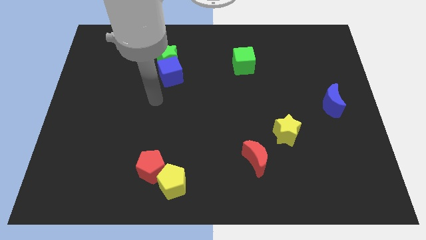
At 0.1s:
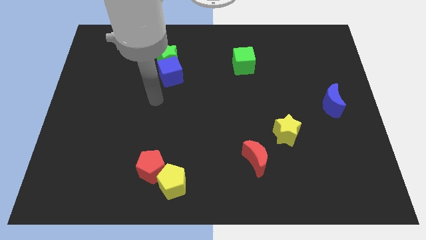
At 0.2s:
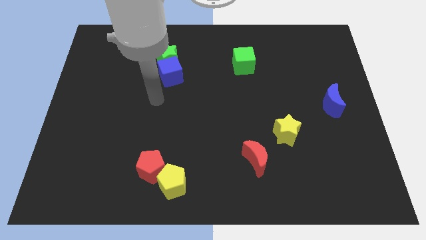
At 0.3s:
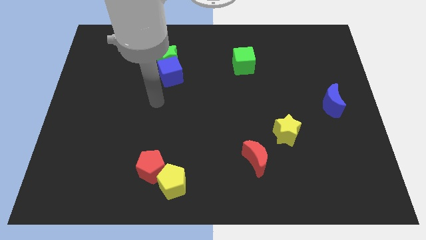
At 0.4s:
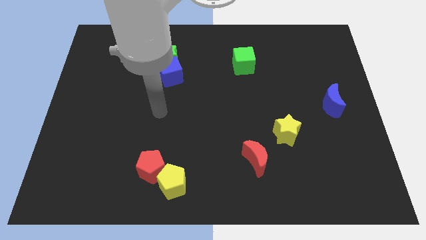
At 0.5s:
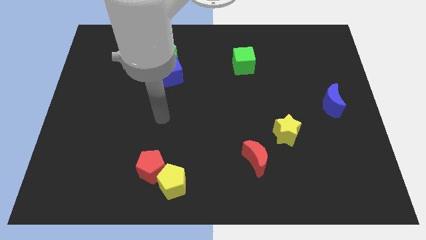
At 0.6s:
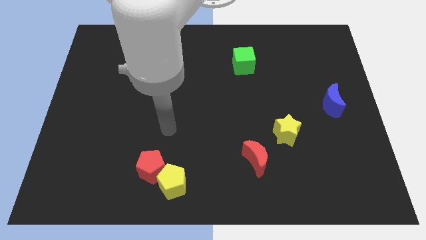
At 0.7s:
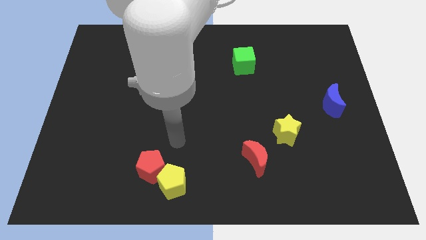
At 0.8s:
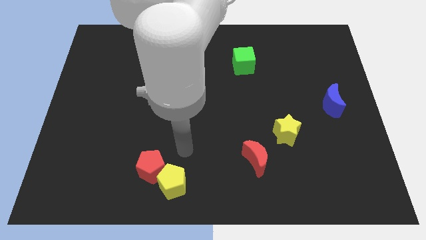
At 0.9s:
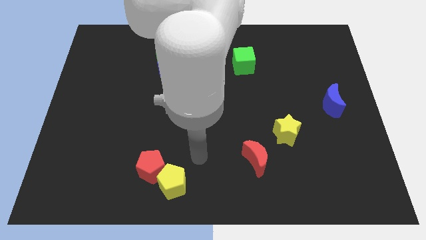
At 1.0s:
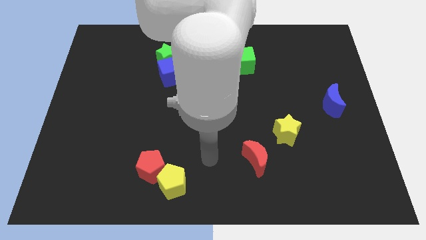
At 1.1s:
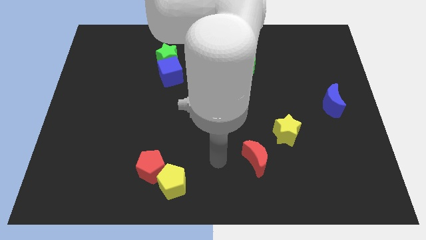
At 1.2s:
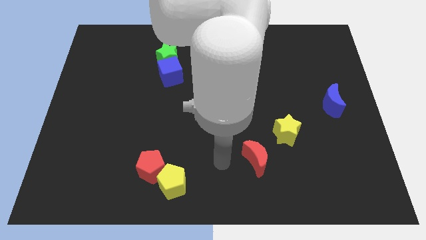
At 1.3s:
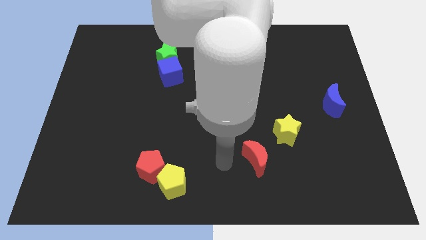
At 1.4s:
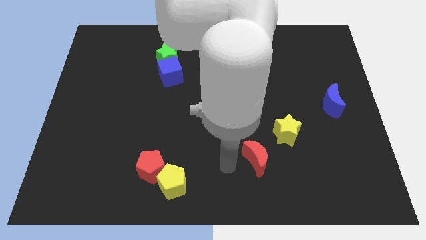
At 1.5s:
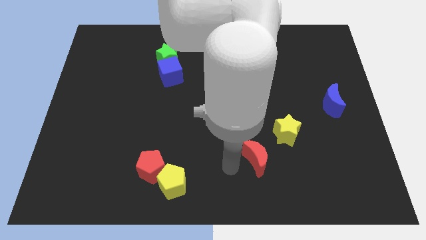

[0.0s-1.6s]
point your arm to the left side of red moon

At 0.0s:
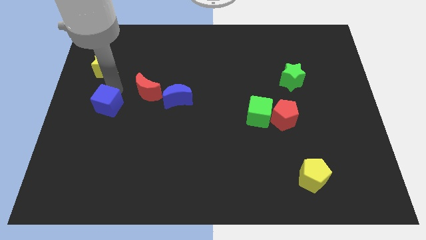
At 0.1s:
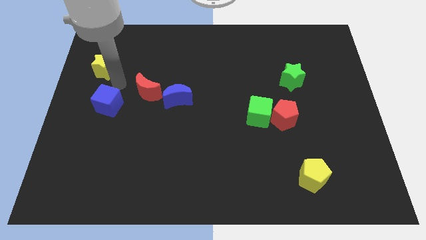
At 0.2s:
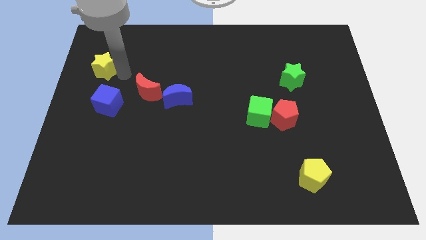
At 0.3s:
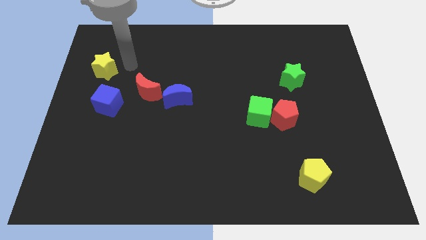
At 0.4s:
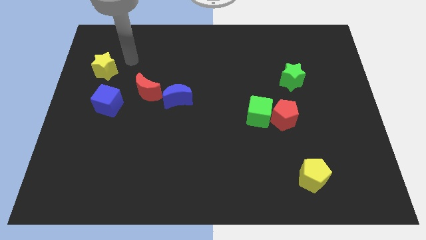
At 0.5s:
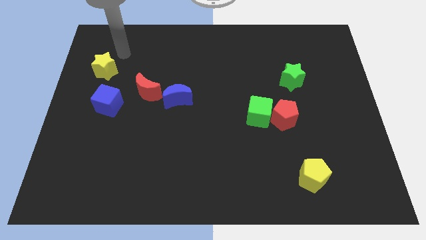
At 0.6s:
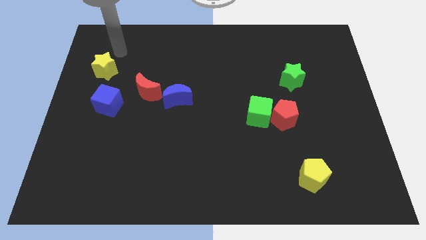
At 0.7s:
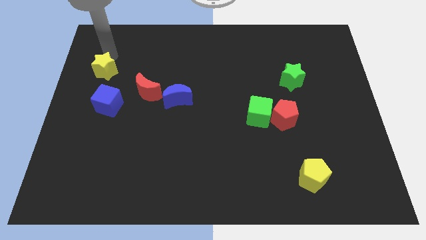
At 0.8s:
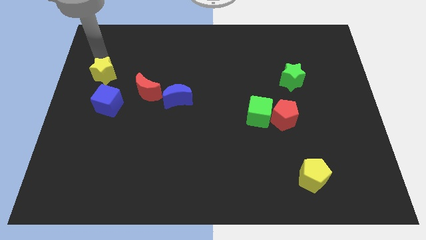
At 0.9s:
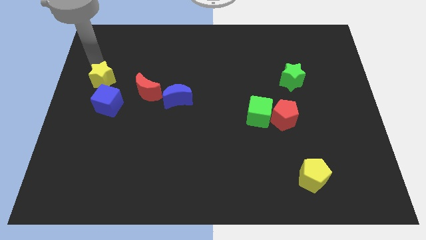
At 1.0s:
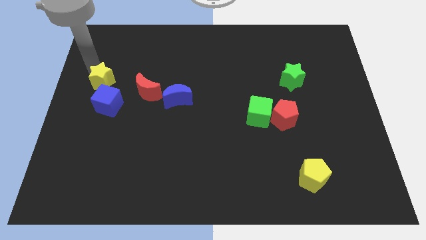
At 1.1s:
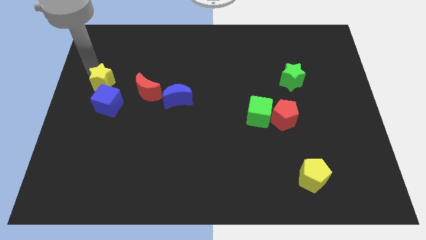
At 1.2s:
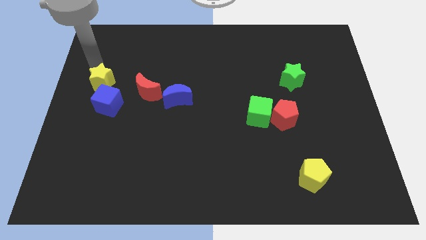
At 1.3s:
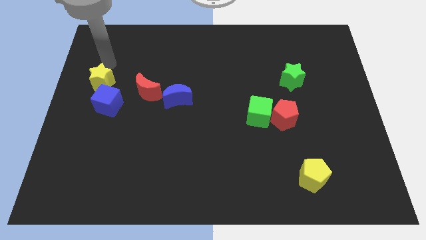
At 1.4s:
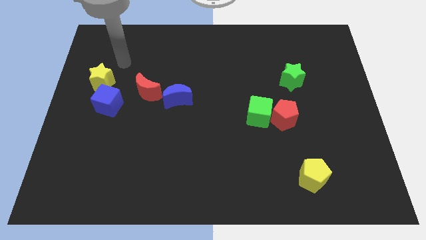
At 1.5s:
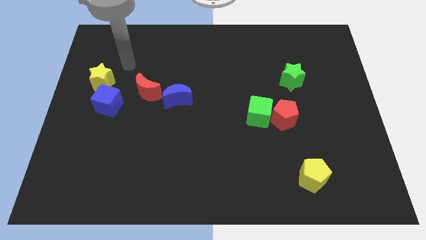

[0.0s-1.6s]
place the yellow star at the top left side of blue cube

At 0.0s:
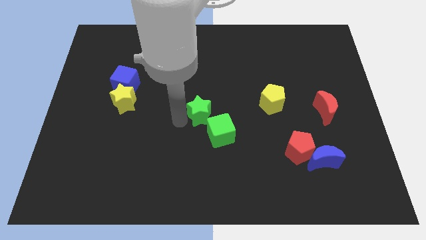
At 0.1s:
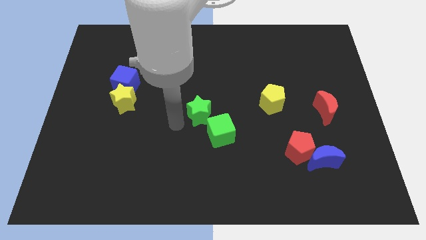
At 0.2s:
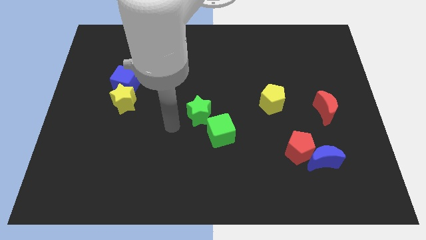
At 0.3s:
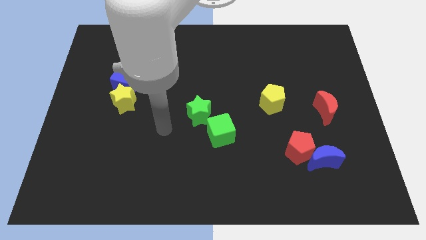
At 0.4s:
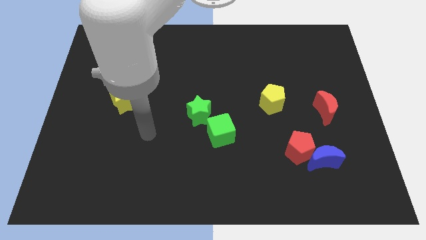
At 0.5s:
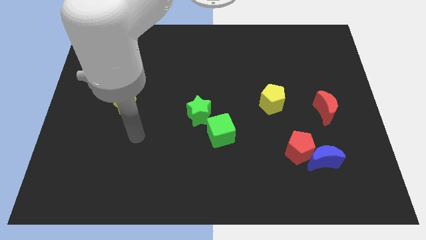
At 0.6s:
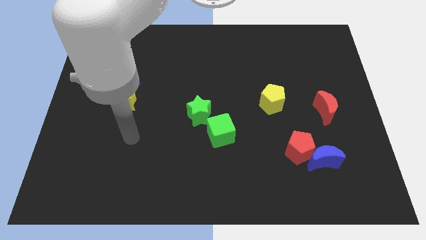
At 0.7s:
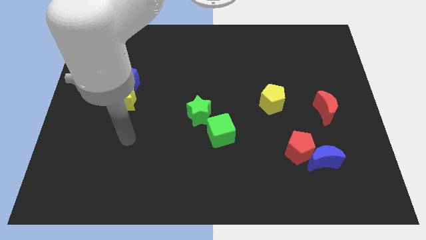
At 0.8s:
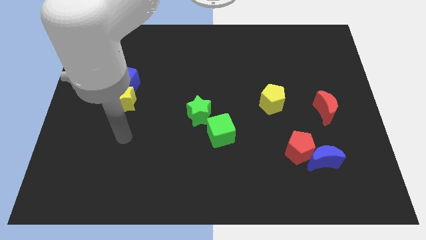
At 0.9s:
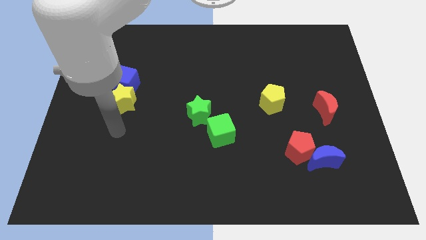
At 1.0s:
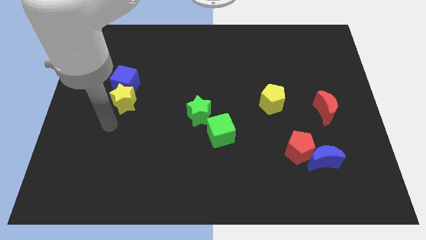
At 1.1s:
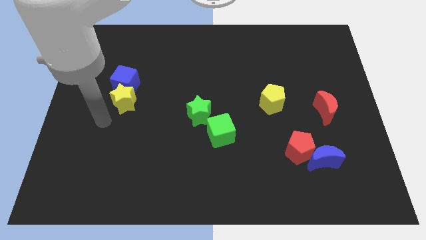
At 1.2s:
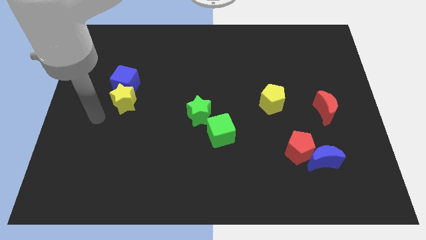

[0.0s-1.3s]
move your arm away from green star

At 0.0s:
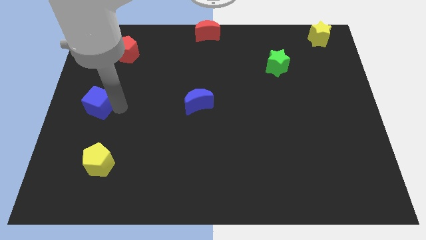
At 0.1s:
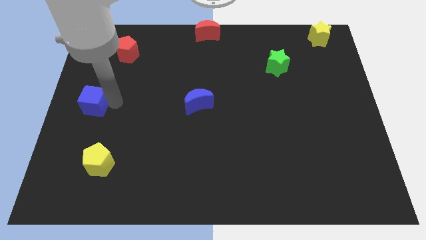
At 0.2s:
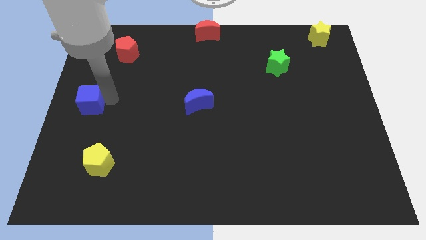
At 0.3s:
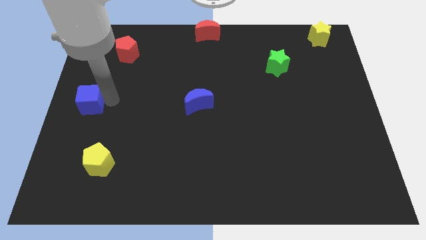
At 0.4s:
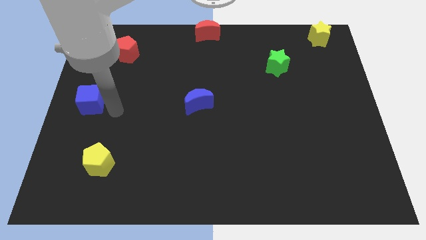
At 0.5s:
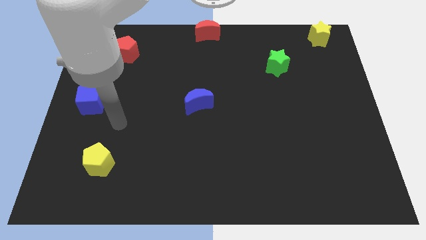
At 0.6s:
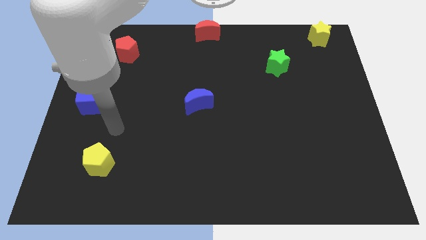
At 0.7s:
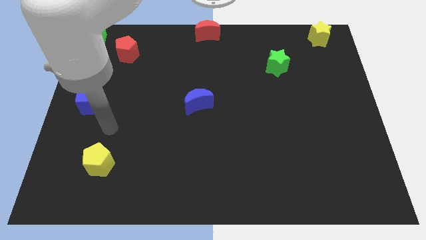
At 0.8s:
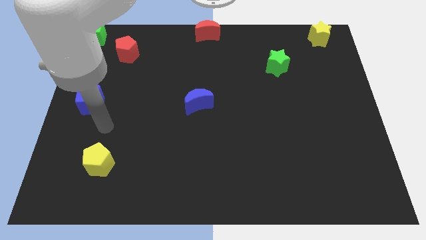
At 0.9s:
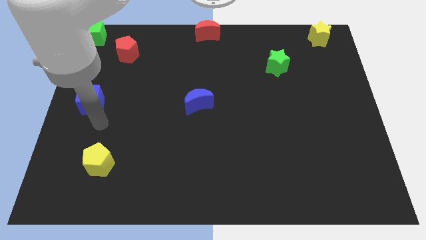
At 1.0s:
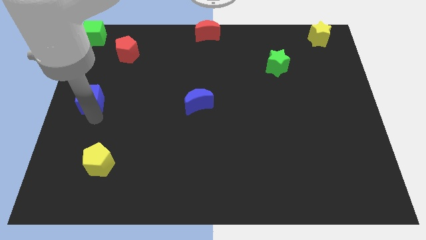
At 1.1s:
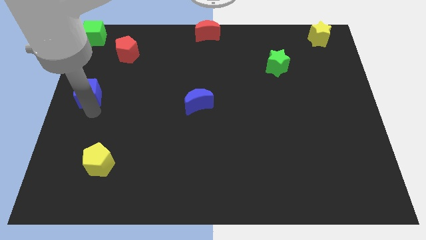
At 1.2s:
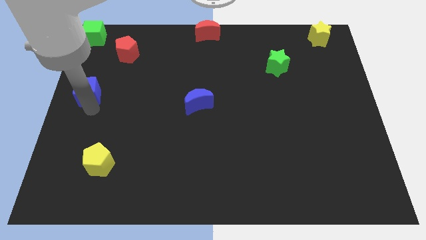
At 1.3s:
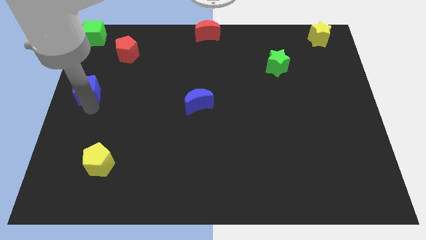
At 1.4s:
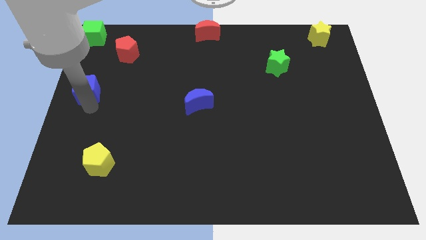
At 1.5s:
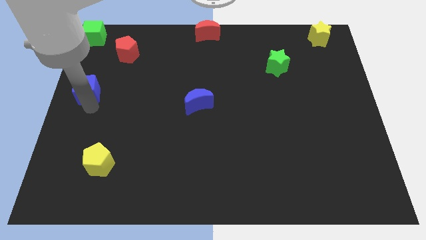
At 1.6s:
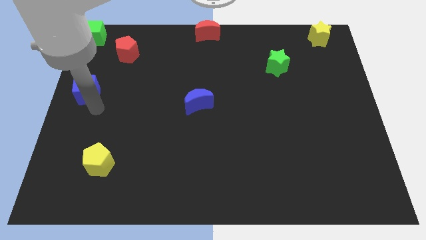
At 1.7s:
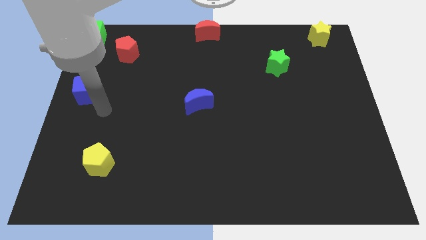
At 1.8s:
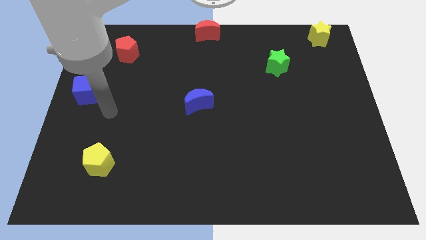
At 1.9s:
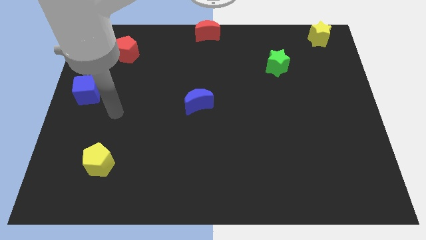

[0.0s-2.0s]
move the blue cube slightly to the top

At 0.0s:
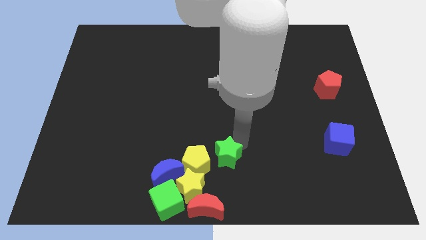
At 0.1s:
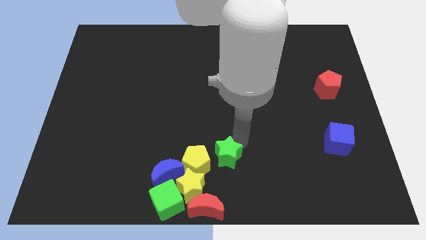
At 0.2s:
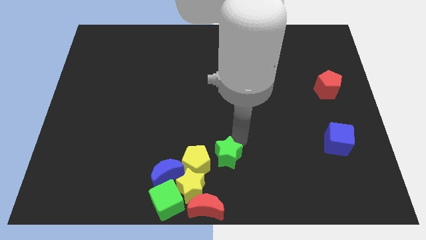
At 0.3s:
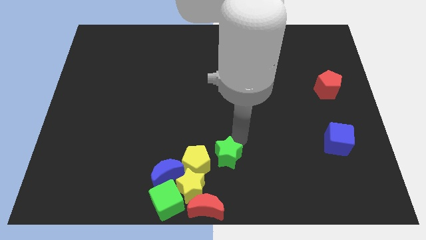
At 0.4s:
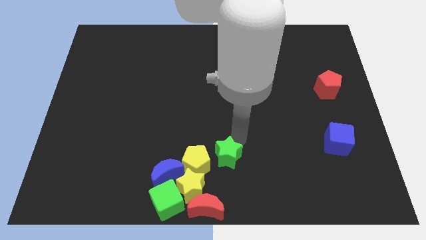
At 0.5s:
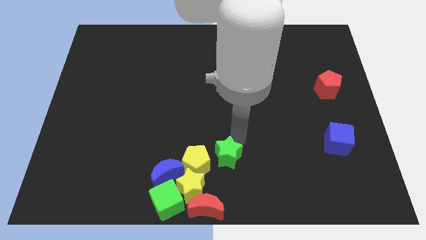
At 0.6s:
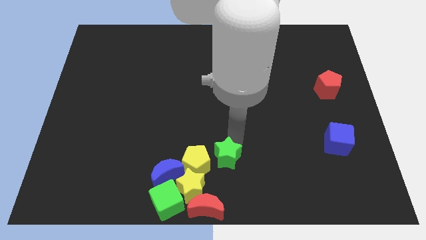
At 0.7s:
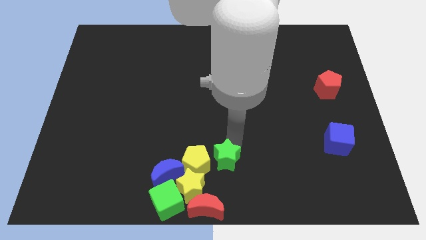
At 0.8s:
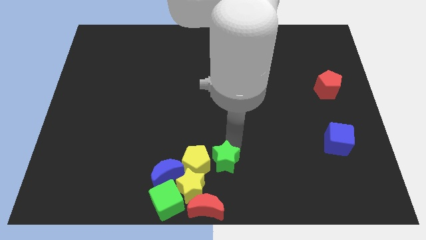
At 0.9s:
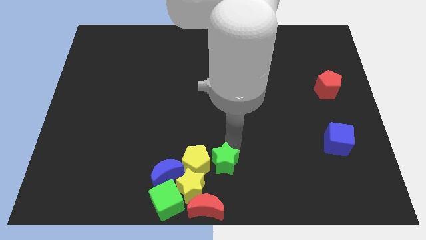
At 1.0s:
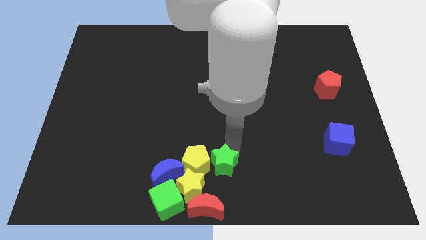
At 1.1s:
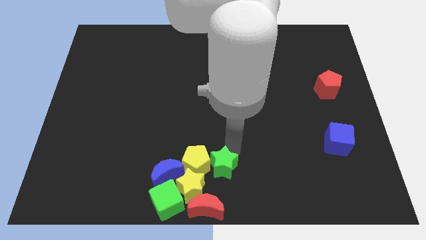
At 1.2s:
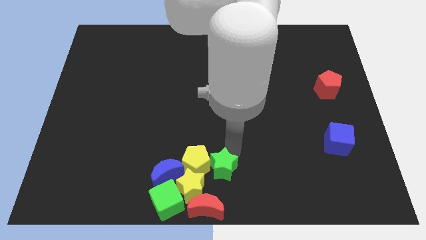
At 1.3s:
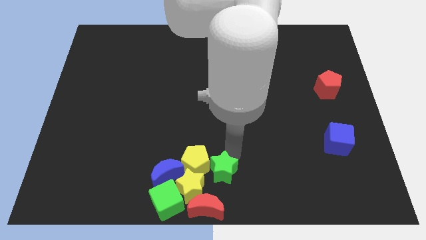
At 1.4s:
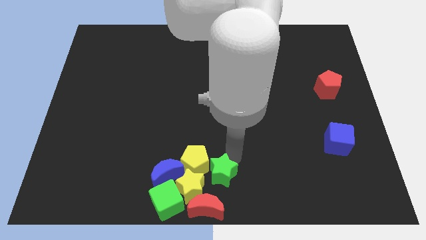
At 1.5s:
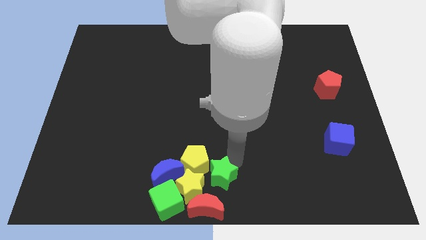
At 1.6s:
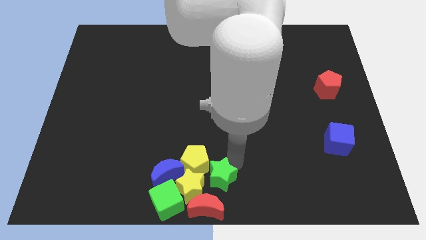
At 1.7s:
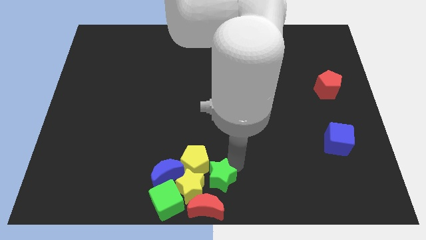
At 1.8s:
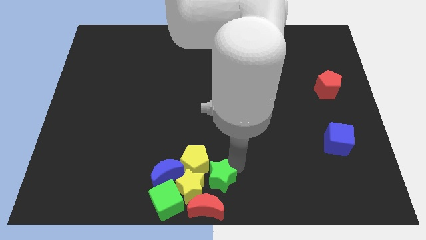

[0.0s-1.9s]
push the green star towards the top right side of the yellow star

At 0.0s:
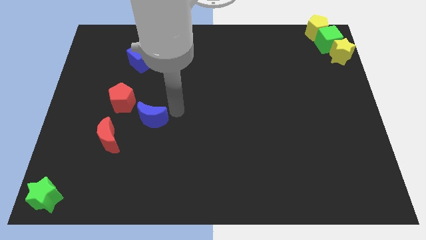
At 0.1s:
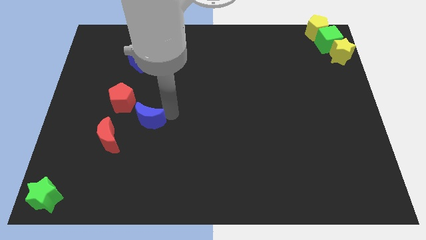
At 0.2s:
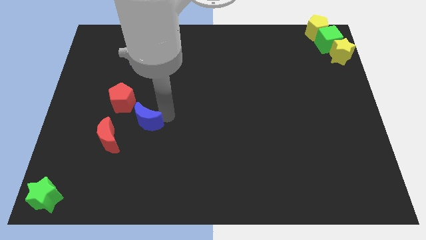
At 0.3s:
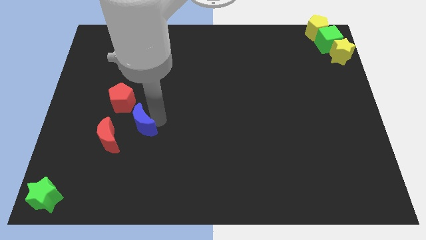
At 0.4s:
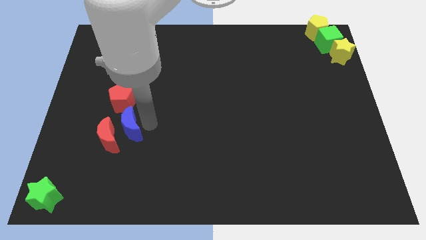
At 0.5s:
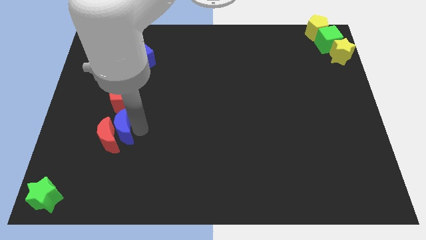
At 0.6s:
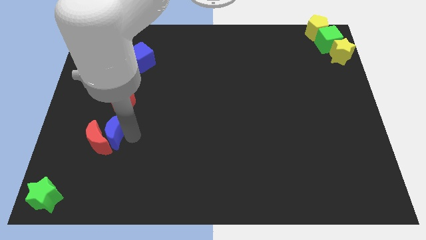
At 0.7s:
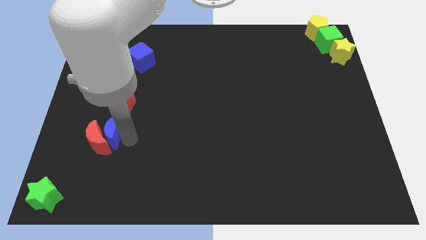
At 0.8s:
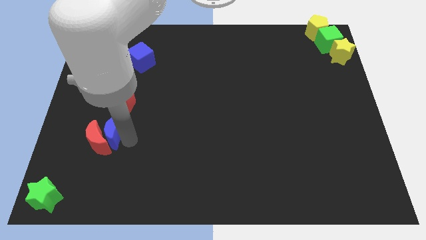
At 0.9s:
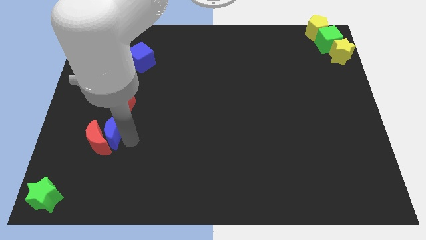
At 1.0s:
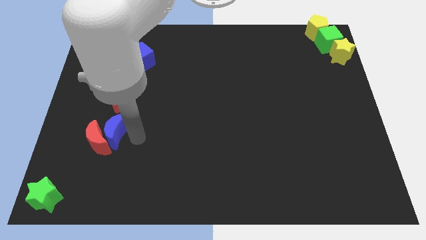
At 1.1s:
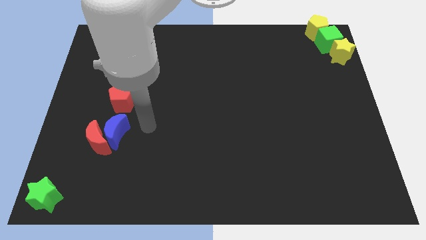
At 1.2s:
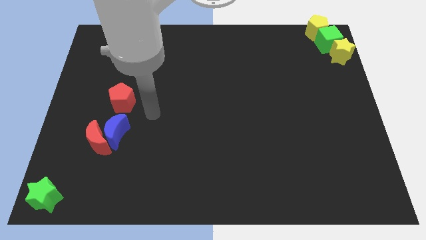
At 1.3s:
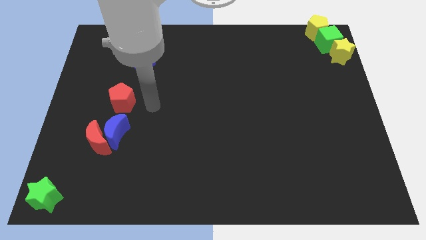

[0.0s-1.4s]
push the blue moon into the red moon
